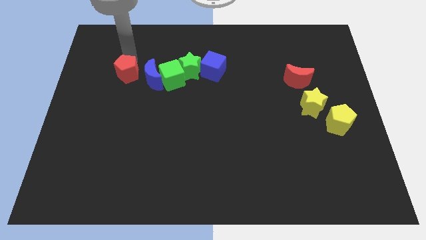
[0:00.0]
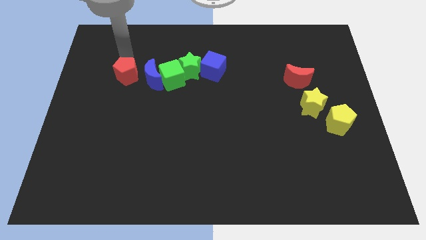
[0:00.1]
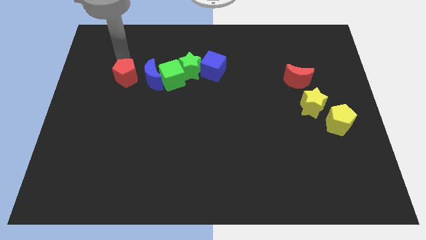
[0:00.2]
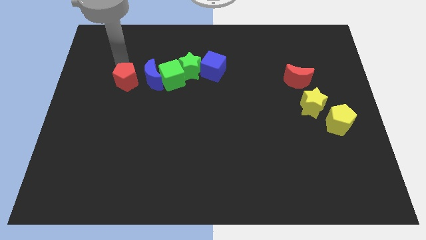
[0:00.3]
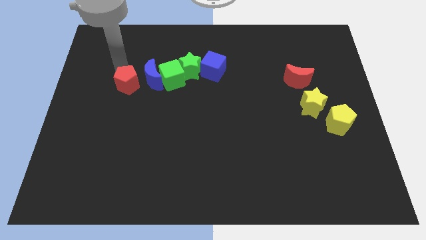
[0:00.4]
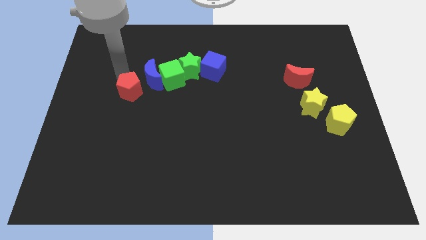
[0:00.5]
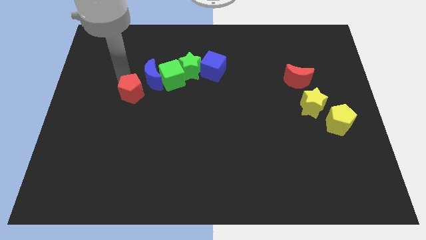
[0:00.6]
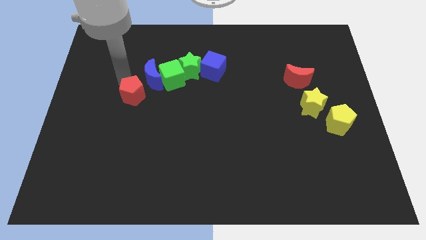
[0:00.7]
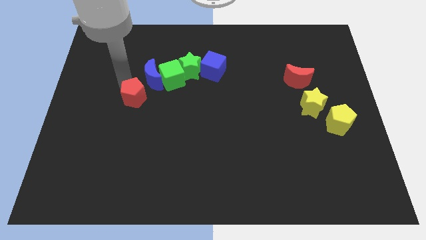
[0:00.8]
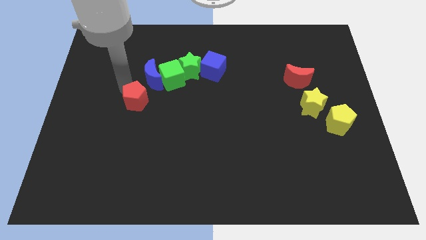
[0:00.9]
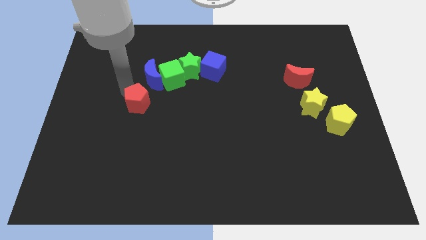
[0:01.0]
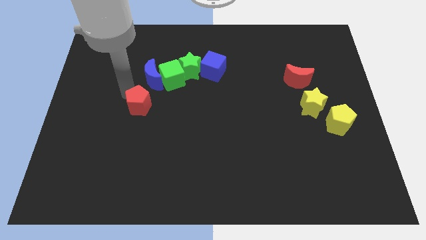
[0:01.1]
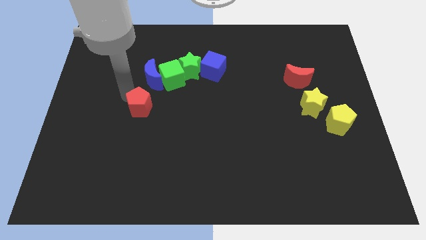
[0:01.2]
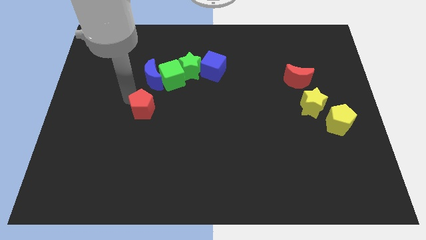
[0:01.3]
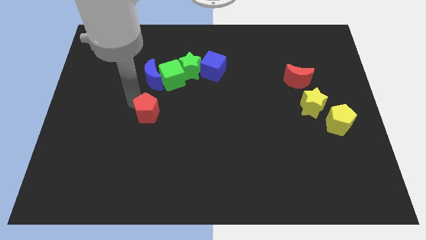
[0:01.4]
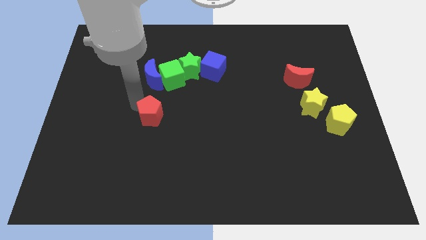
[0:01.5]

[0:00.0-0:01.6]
place your arm to the left of red pentagon

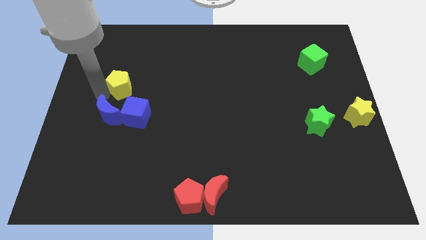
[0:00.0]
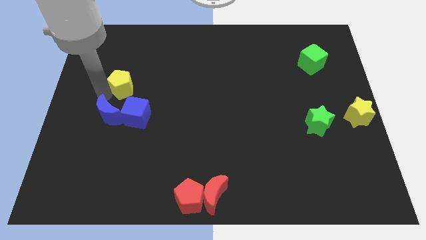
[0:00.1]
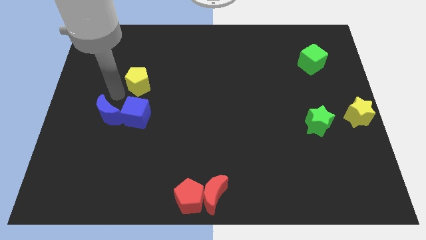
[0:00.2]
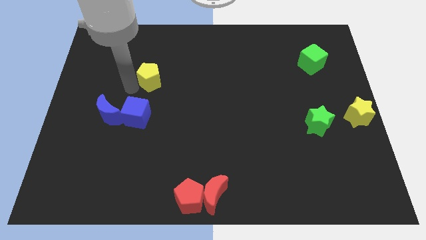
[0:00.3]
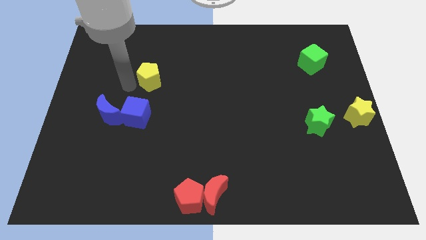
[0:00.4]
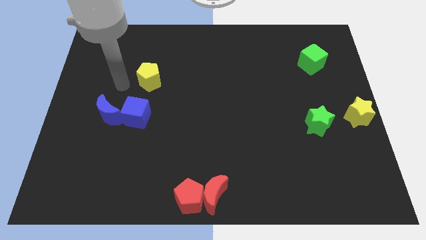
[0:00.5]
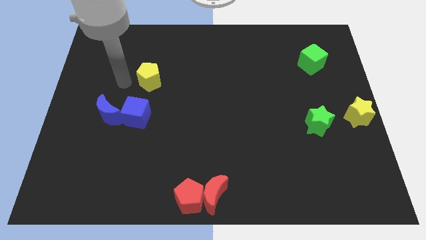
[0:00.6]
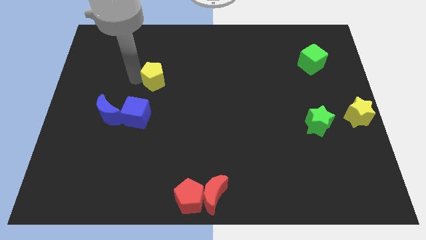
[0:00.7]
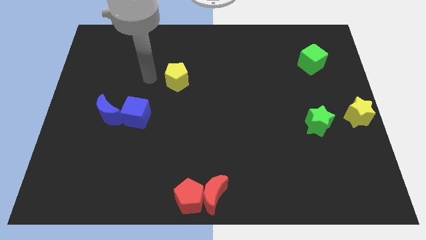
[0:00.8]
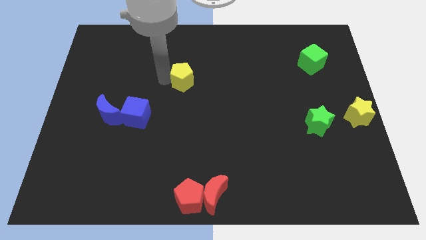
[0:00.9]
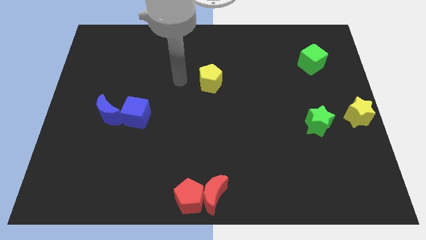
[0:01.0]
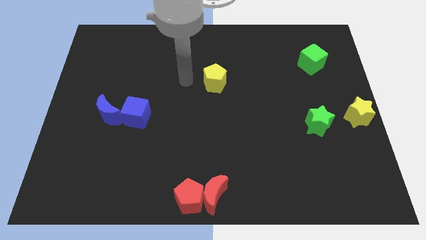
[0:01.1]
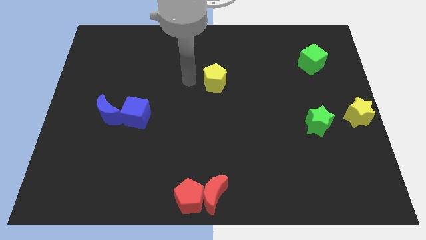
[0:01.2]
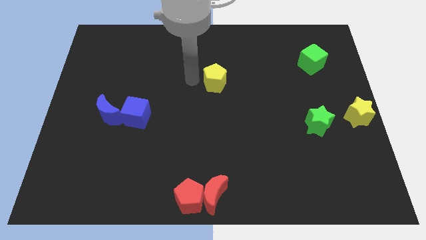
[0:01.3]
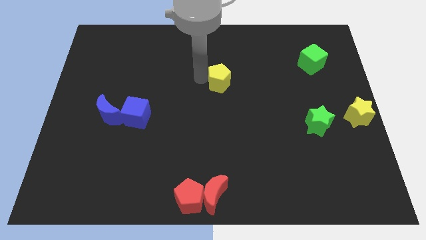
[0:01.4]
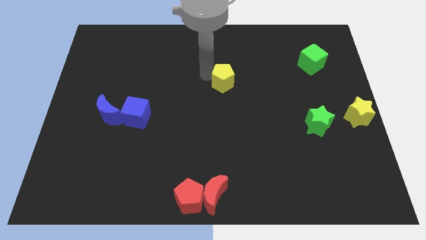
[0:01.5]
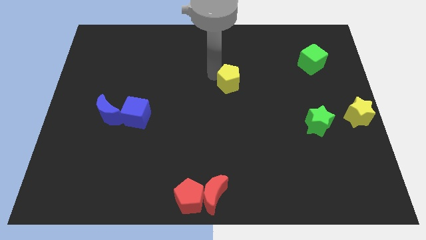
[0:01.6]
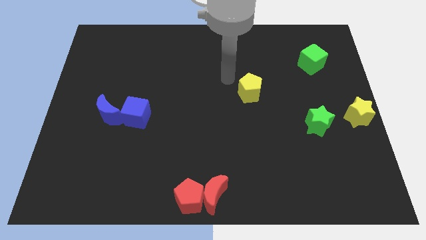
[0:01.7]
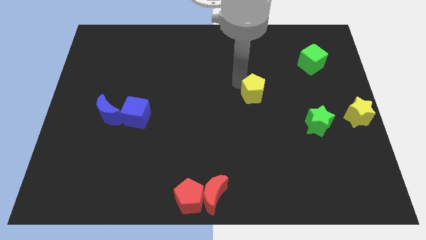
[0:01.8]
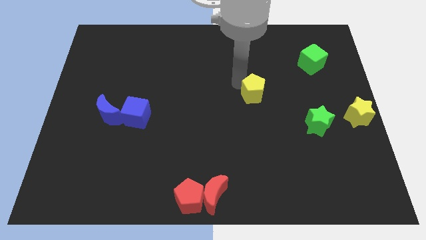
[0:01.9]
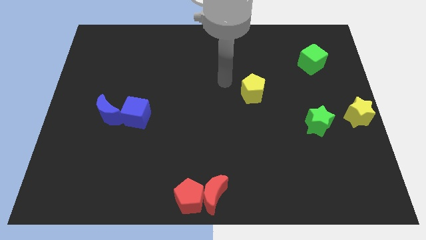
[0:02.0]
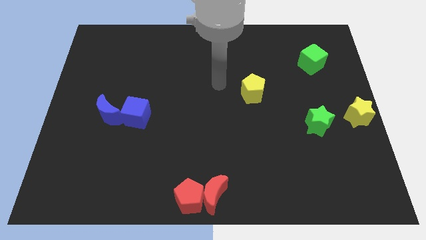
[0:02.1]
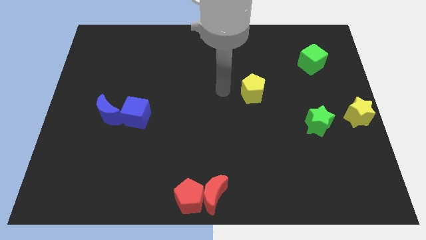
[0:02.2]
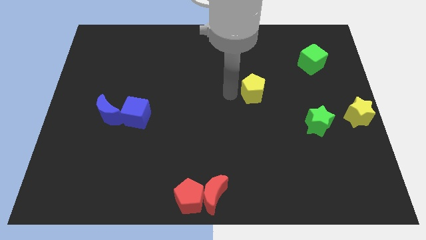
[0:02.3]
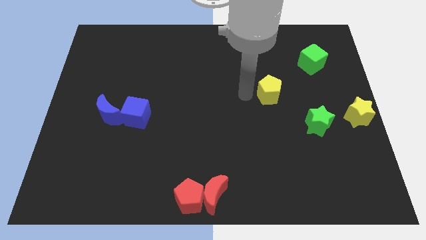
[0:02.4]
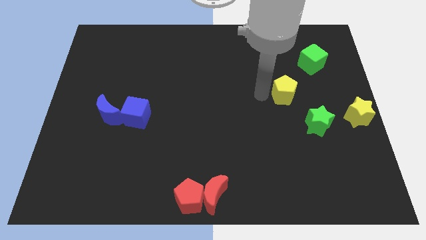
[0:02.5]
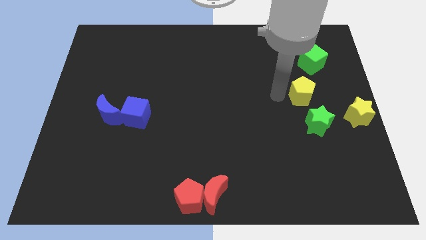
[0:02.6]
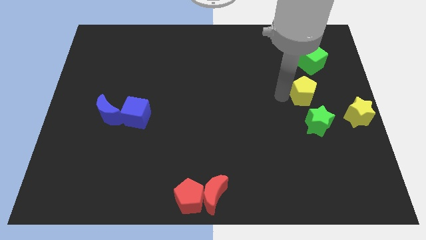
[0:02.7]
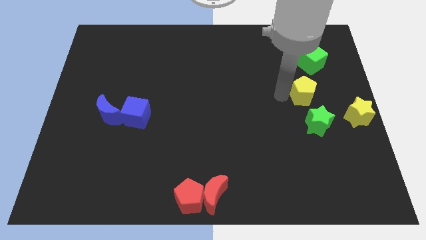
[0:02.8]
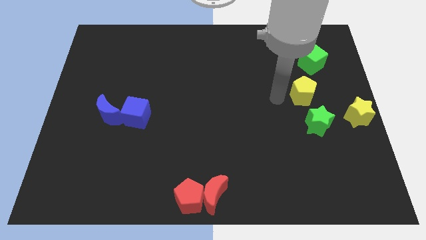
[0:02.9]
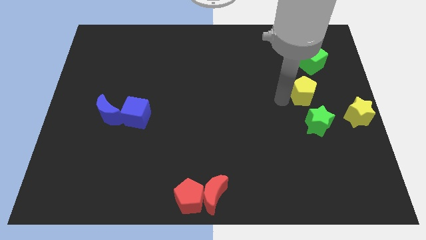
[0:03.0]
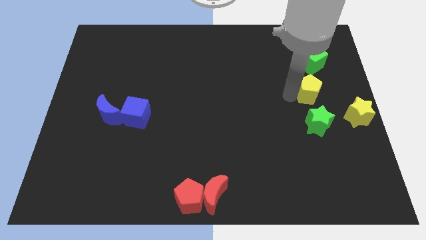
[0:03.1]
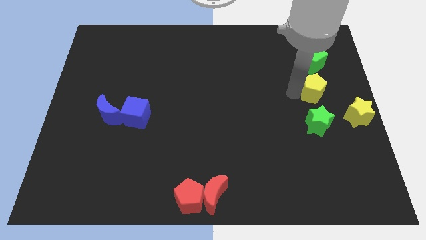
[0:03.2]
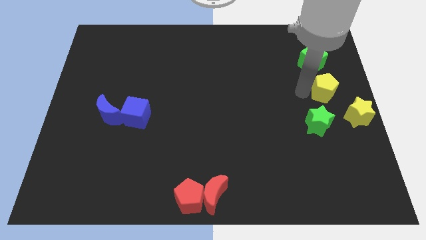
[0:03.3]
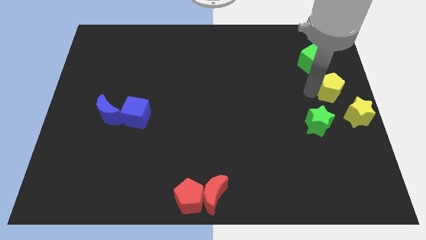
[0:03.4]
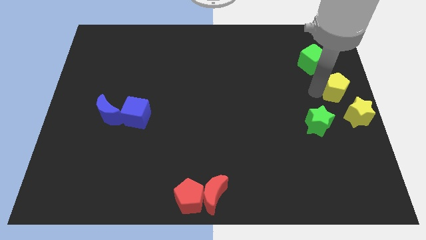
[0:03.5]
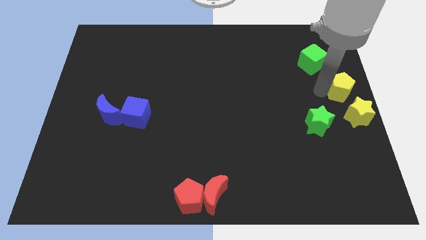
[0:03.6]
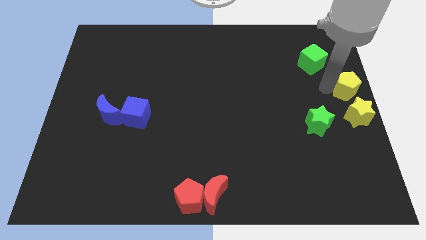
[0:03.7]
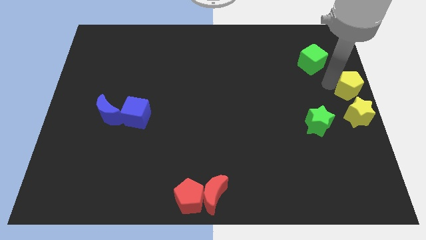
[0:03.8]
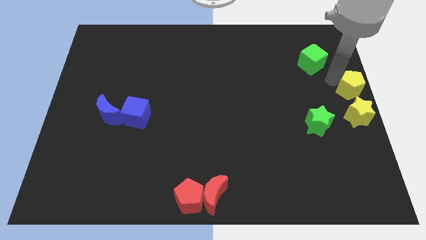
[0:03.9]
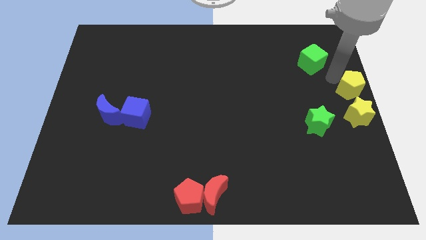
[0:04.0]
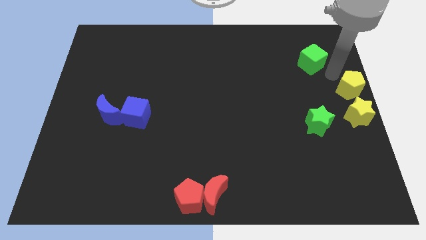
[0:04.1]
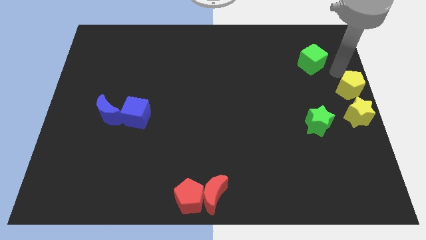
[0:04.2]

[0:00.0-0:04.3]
push the yellow pentagon to the top of the yellow star

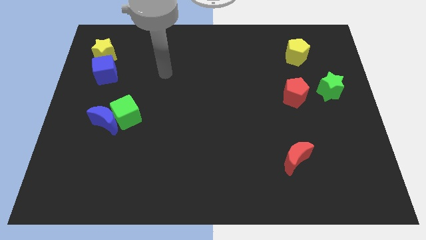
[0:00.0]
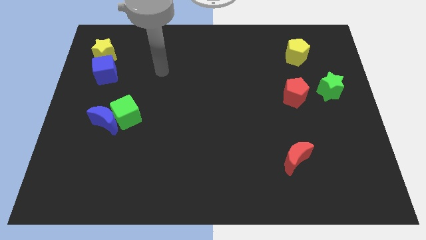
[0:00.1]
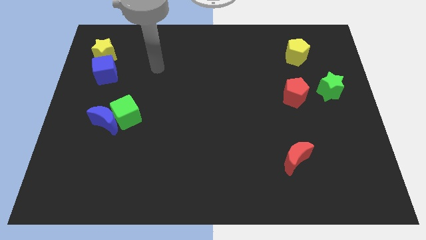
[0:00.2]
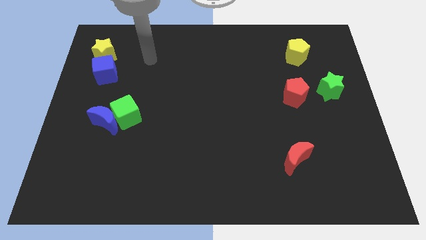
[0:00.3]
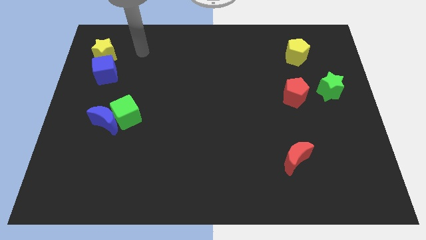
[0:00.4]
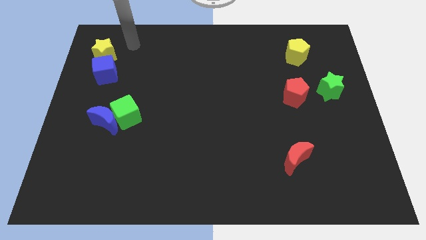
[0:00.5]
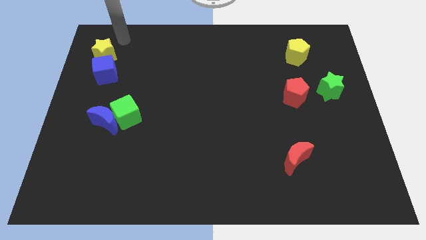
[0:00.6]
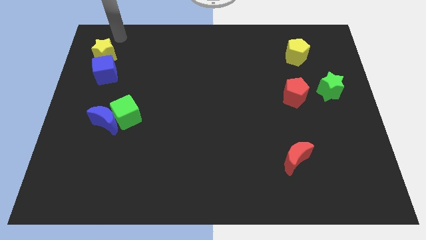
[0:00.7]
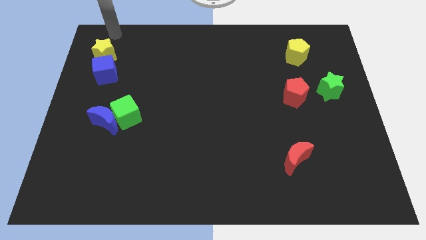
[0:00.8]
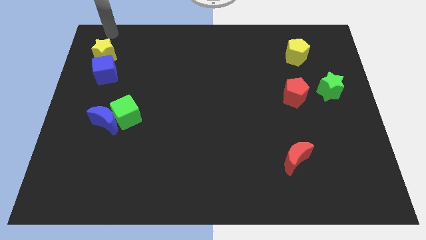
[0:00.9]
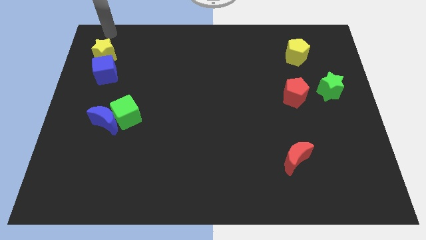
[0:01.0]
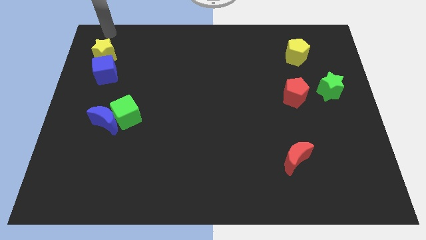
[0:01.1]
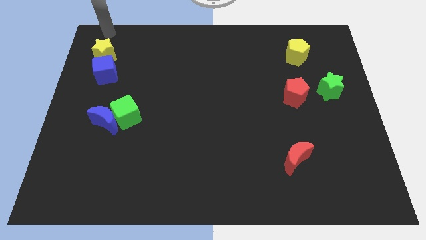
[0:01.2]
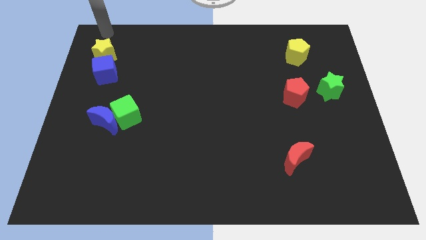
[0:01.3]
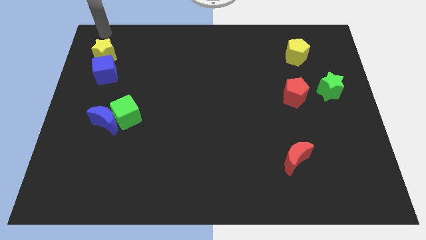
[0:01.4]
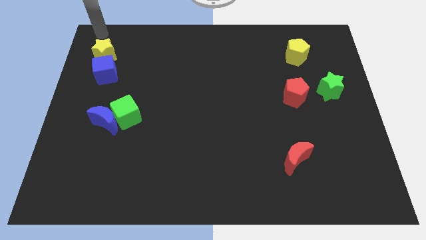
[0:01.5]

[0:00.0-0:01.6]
place your arm to the top of the yellow star

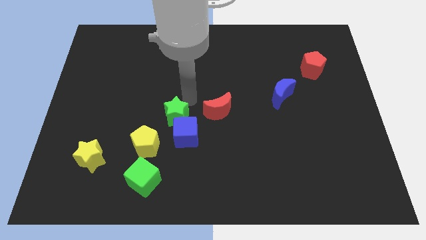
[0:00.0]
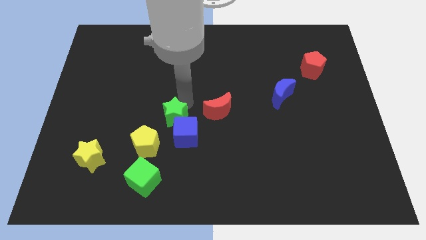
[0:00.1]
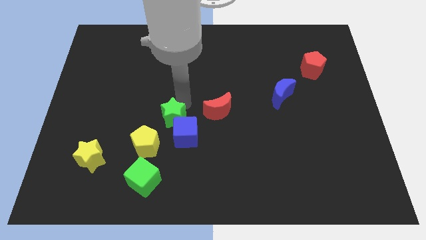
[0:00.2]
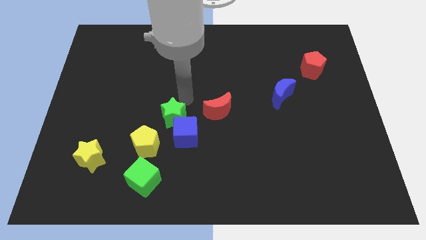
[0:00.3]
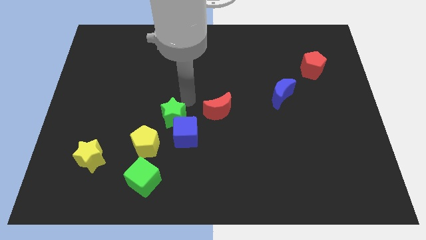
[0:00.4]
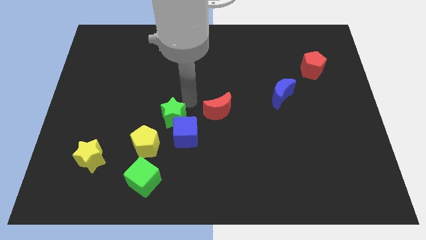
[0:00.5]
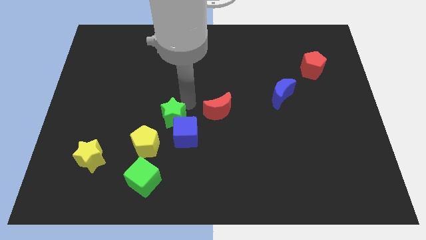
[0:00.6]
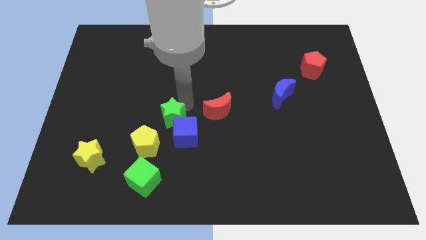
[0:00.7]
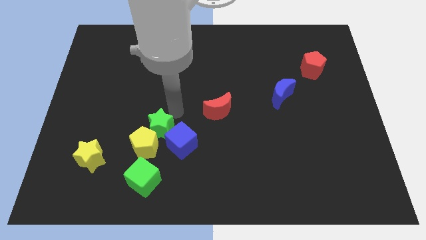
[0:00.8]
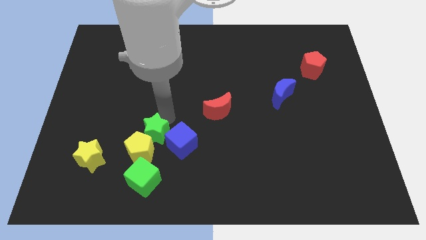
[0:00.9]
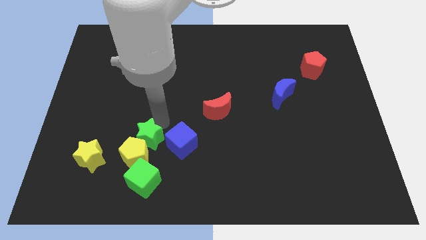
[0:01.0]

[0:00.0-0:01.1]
put the green star into the yellow pentagon

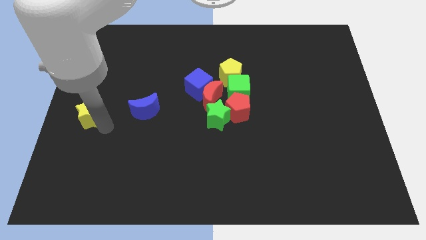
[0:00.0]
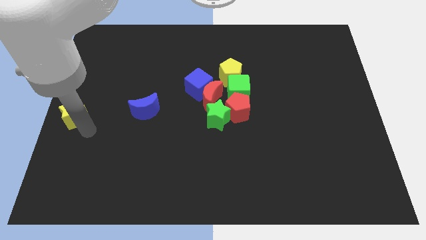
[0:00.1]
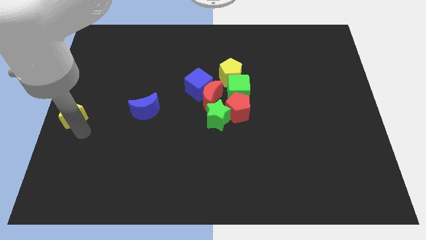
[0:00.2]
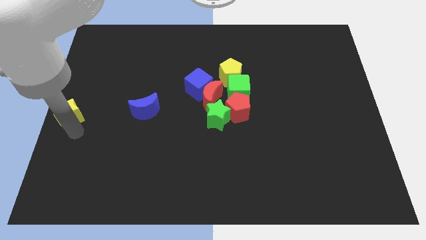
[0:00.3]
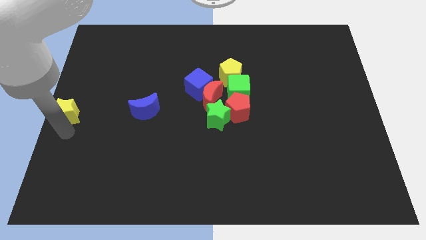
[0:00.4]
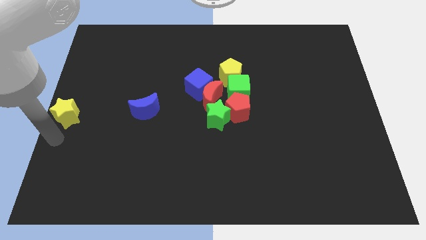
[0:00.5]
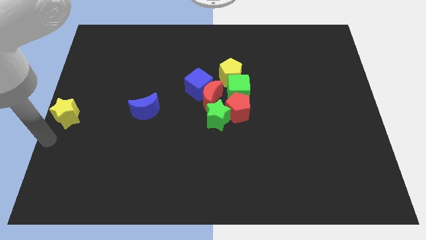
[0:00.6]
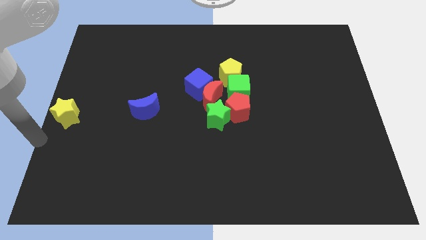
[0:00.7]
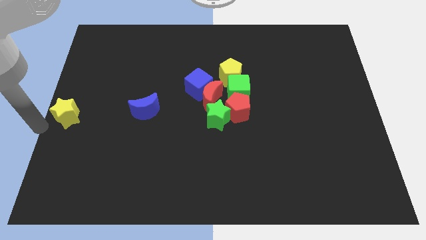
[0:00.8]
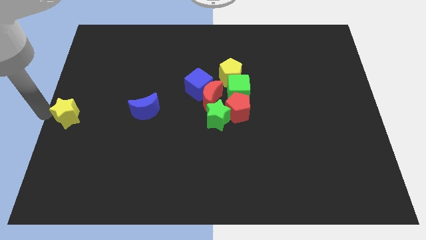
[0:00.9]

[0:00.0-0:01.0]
drag yellow star towards middle left side of the board
